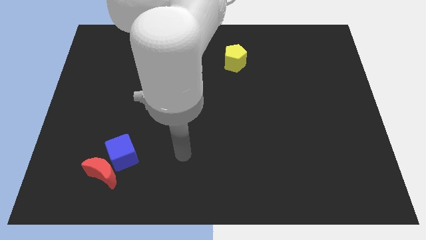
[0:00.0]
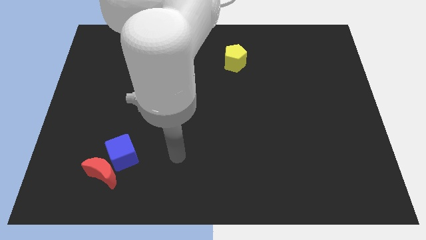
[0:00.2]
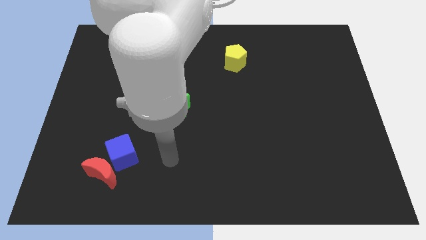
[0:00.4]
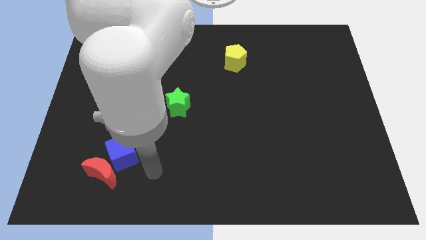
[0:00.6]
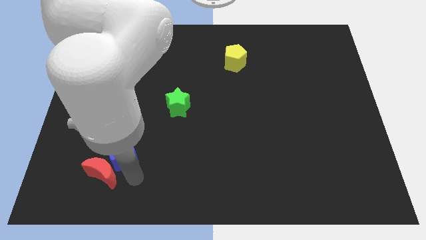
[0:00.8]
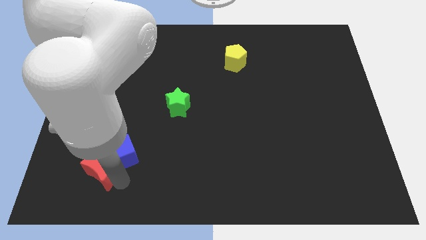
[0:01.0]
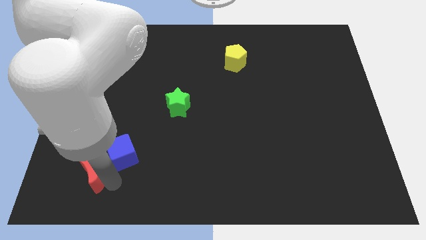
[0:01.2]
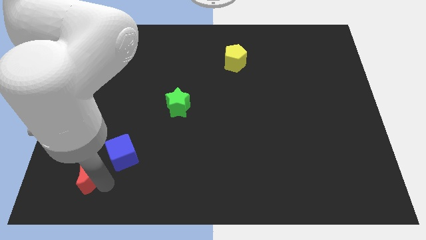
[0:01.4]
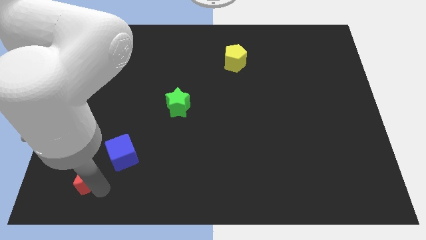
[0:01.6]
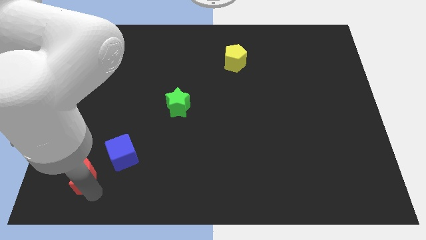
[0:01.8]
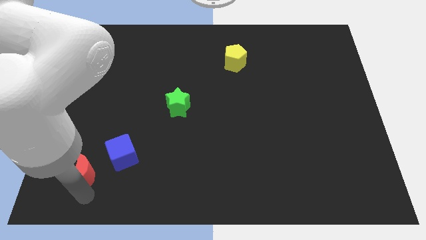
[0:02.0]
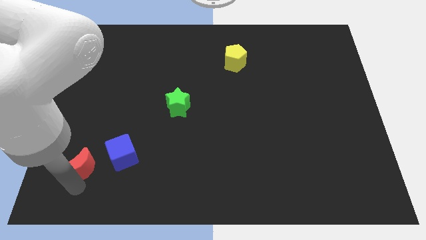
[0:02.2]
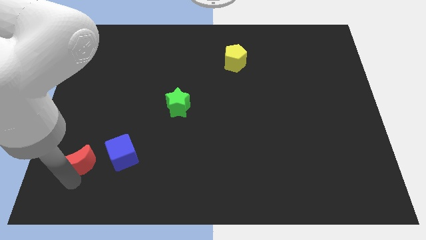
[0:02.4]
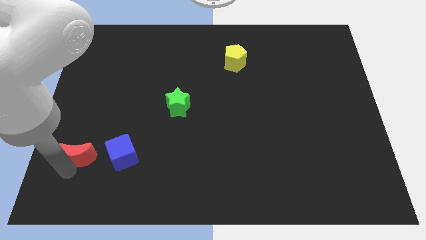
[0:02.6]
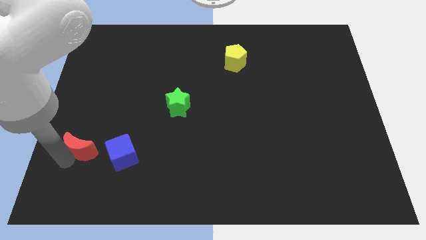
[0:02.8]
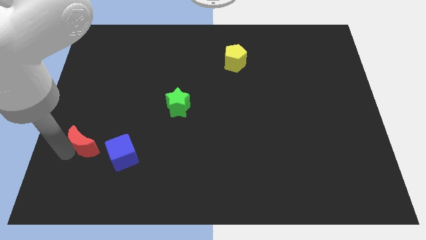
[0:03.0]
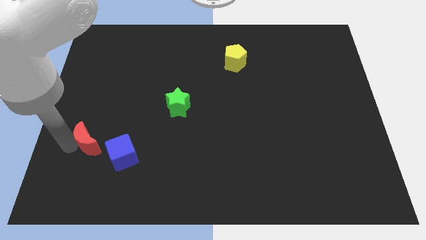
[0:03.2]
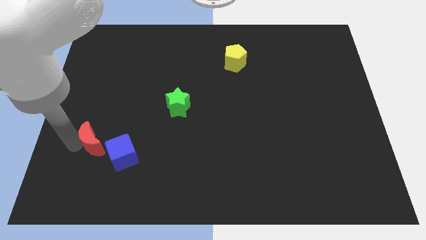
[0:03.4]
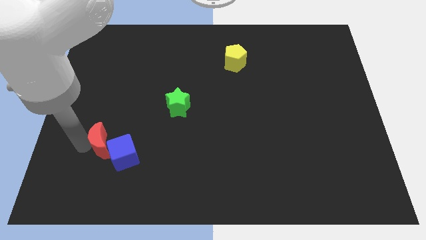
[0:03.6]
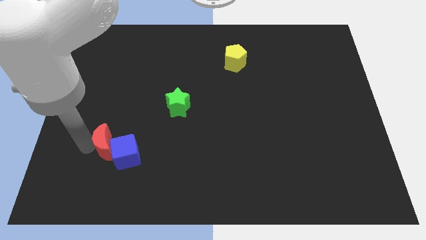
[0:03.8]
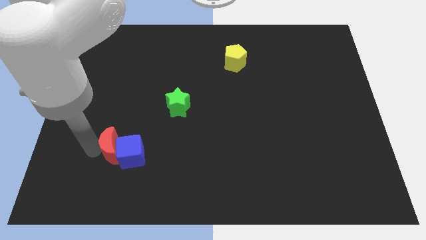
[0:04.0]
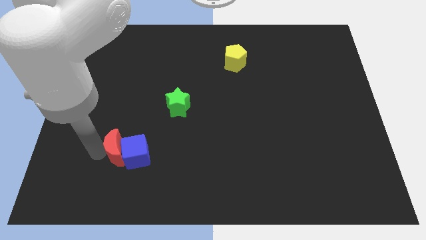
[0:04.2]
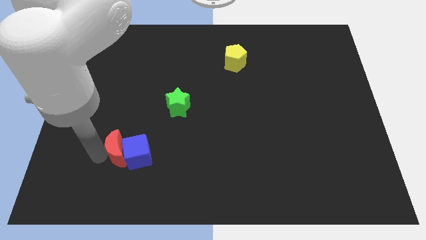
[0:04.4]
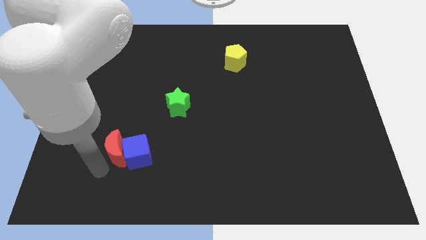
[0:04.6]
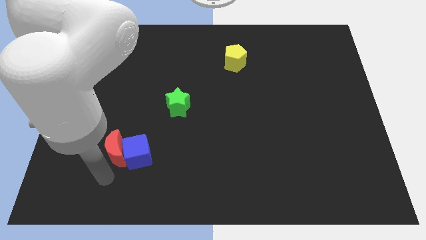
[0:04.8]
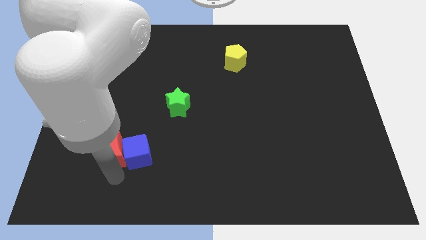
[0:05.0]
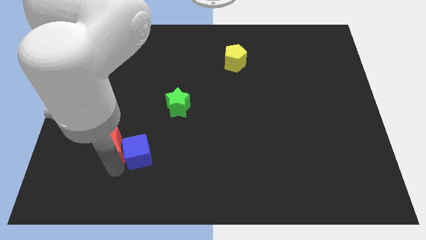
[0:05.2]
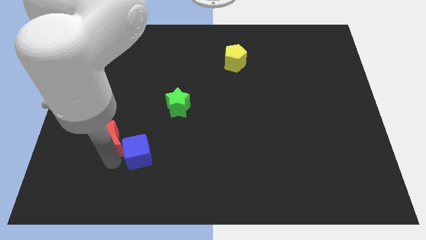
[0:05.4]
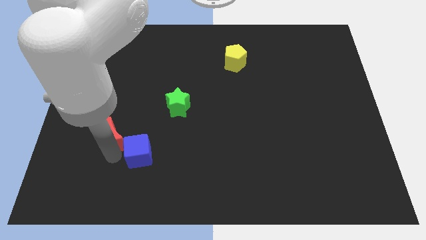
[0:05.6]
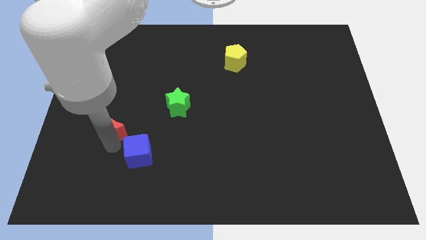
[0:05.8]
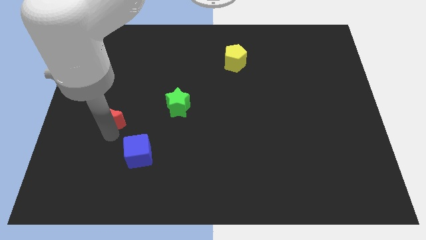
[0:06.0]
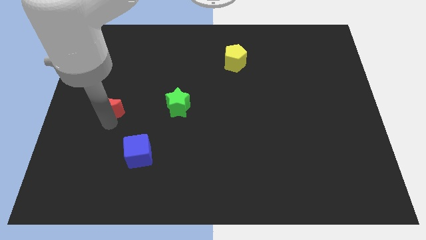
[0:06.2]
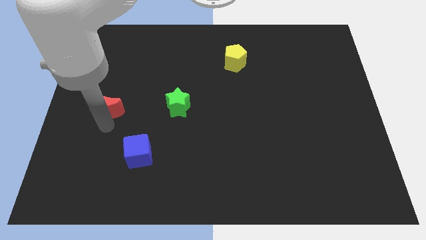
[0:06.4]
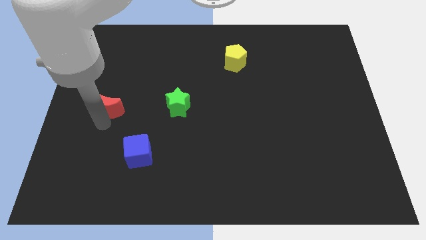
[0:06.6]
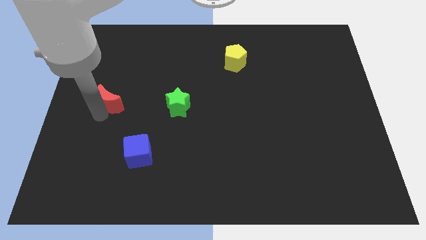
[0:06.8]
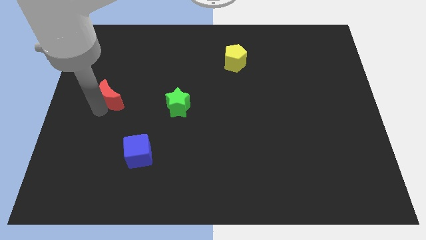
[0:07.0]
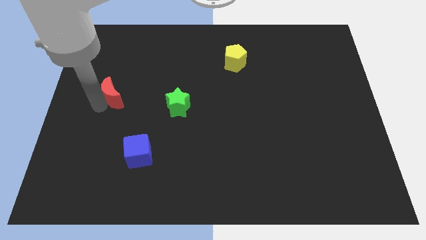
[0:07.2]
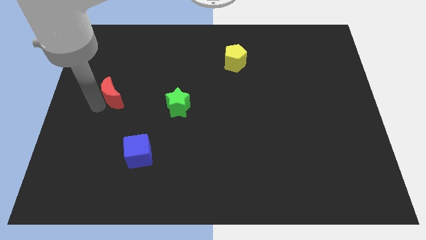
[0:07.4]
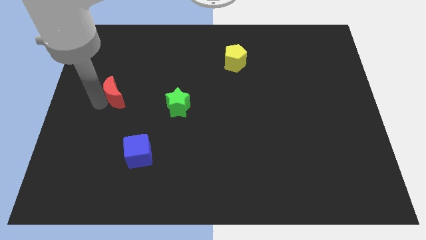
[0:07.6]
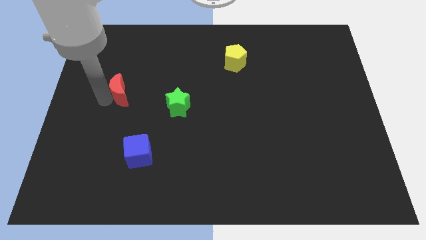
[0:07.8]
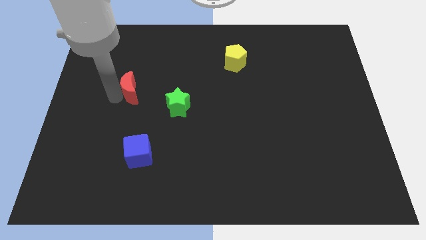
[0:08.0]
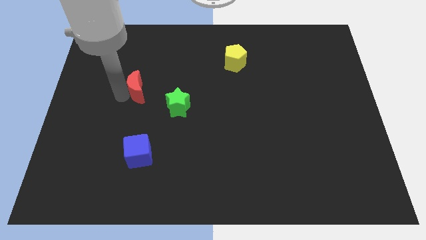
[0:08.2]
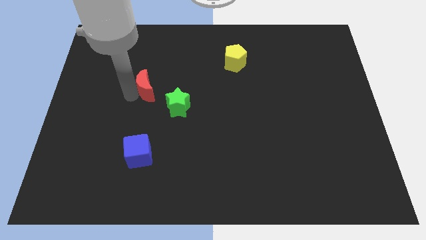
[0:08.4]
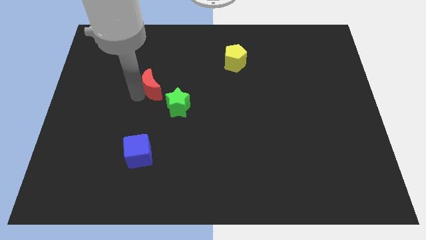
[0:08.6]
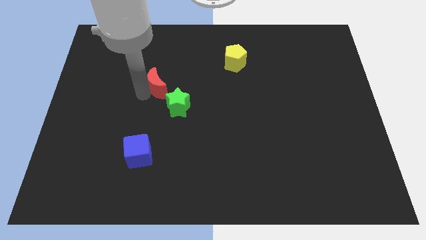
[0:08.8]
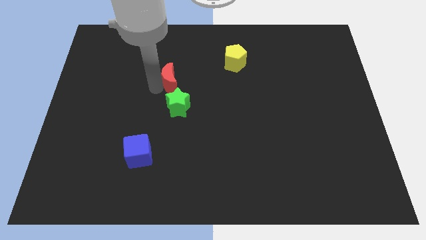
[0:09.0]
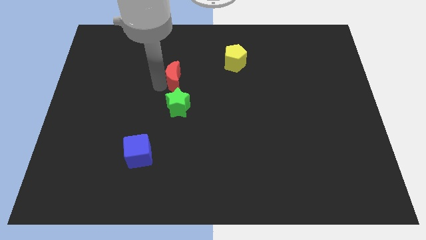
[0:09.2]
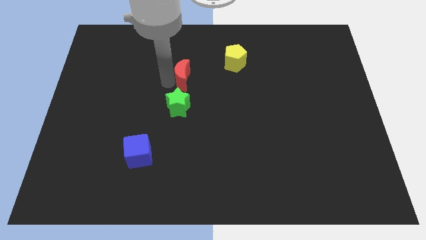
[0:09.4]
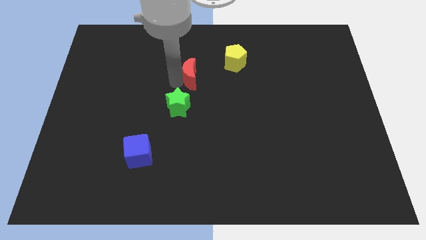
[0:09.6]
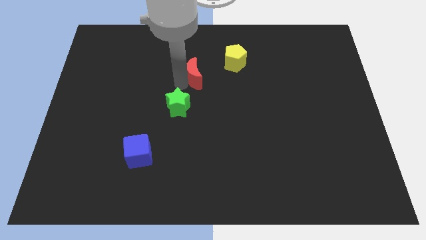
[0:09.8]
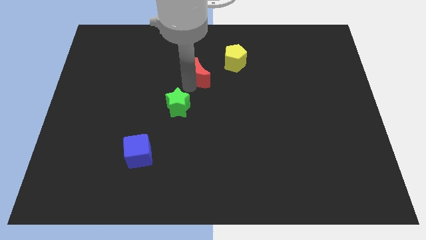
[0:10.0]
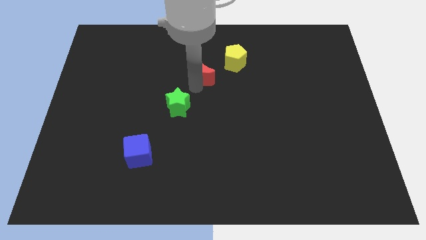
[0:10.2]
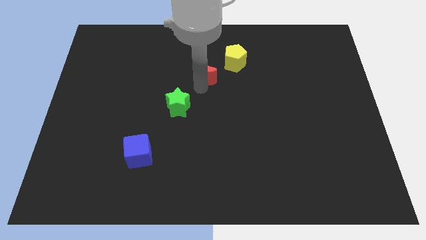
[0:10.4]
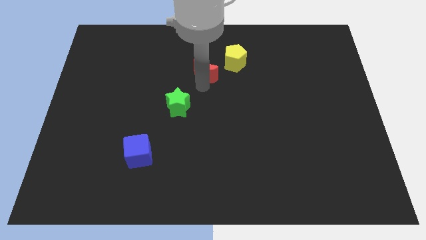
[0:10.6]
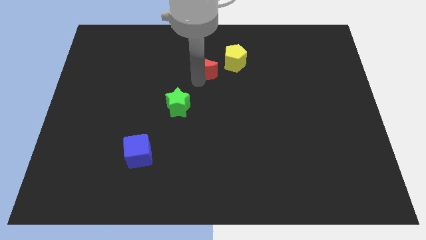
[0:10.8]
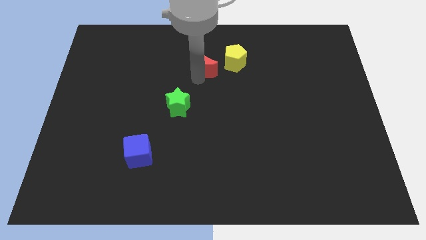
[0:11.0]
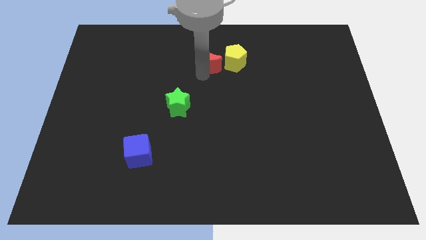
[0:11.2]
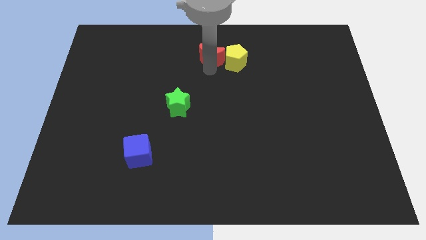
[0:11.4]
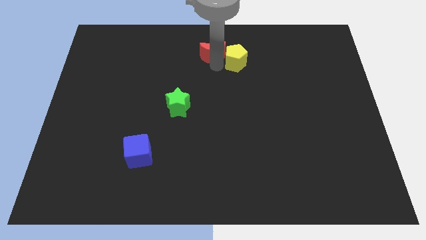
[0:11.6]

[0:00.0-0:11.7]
put the red block towards the yellow pentagon

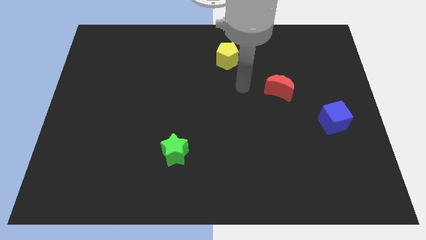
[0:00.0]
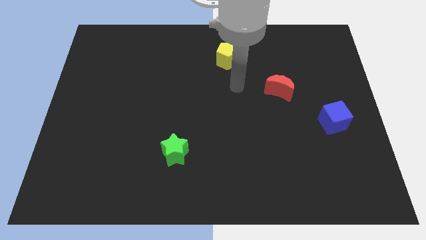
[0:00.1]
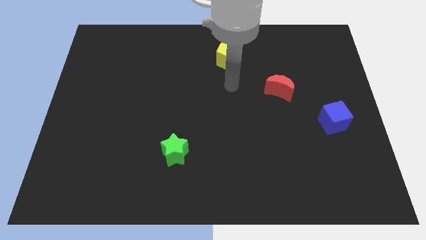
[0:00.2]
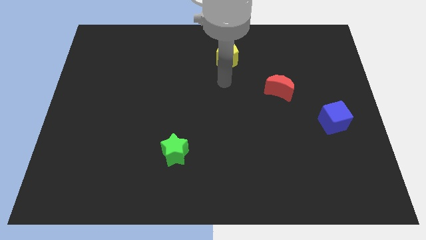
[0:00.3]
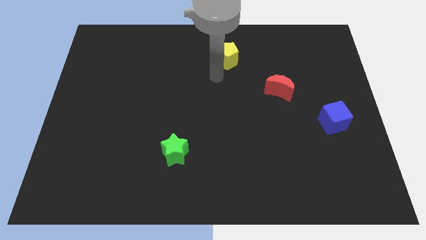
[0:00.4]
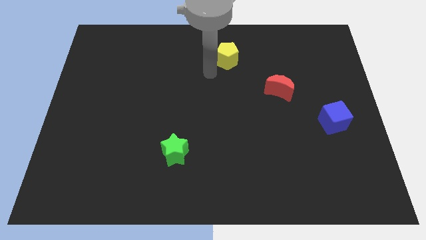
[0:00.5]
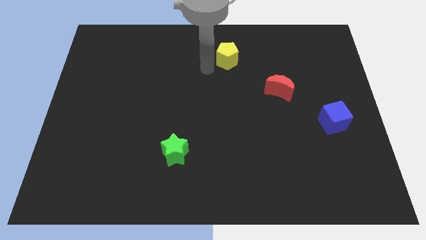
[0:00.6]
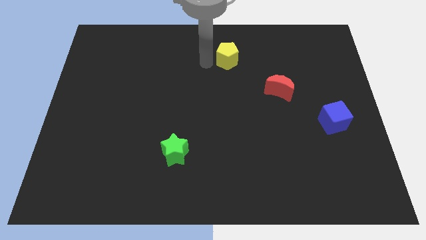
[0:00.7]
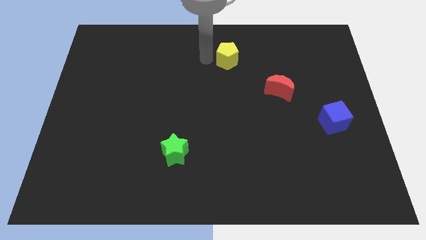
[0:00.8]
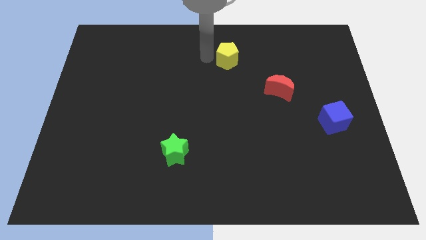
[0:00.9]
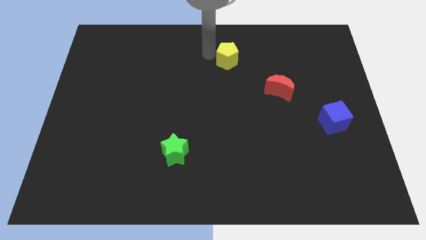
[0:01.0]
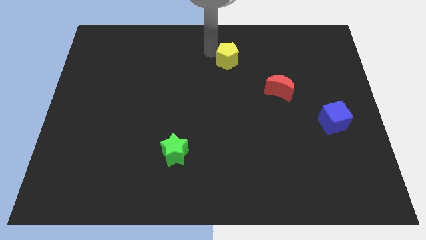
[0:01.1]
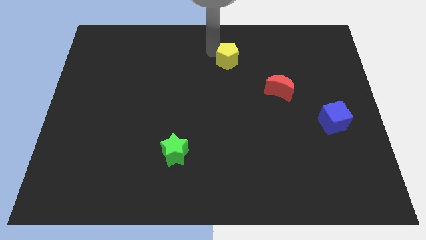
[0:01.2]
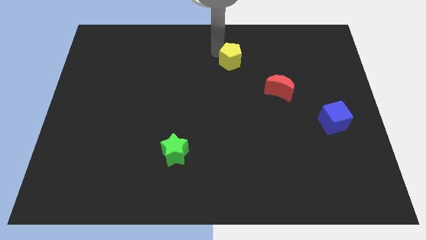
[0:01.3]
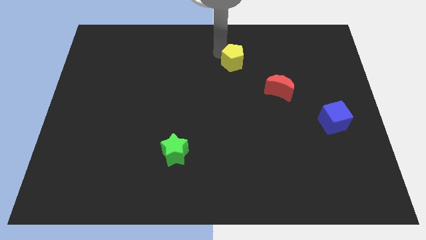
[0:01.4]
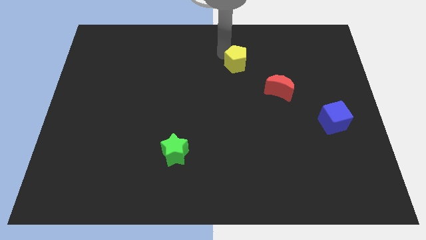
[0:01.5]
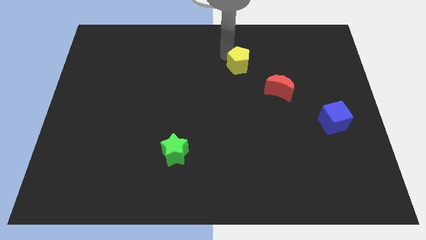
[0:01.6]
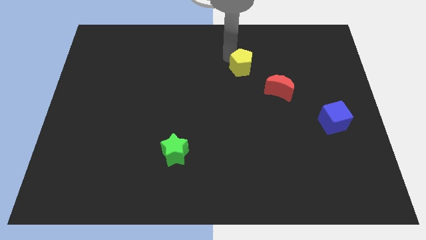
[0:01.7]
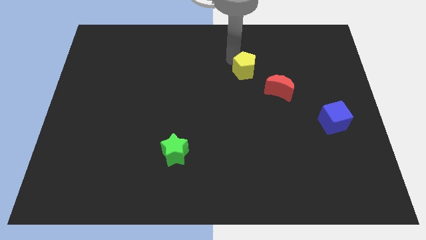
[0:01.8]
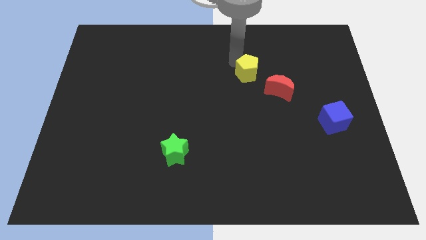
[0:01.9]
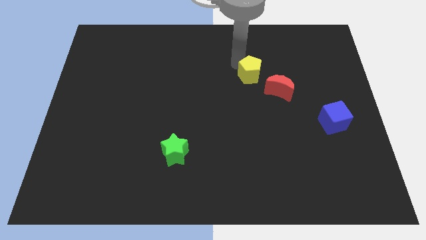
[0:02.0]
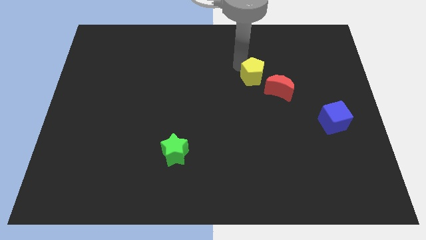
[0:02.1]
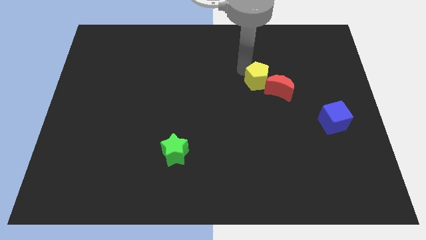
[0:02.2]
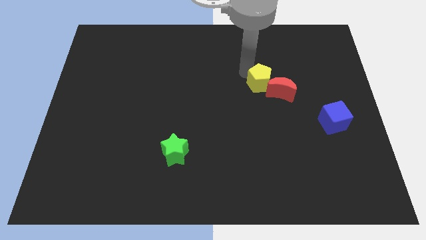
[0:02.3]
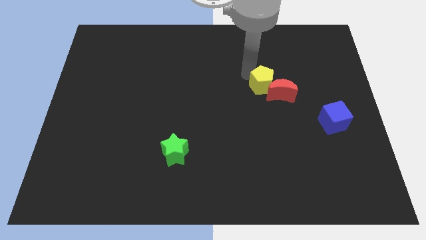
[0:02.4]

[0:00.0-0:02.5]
push the pentagon towards the red block

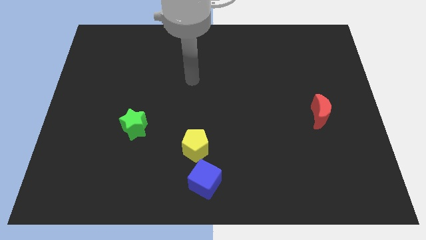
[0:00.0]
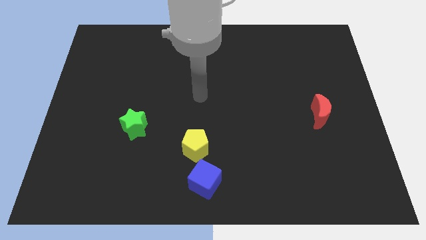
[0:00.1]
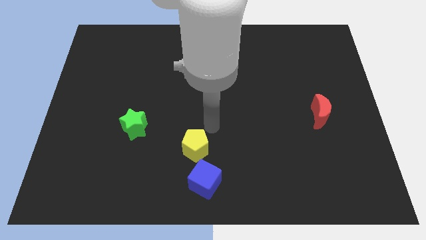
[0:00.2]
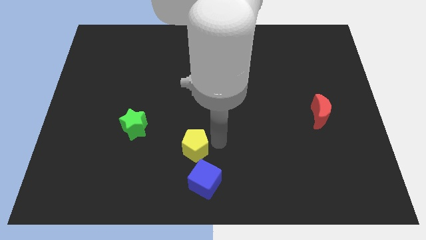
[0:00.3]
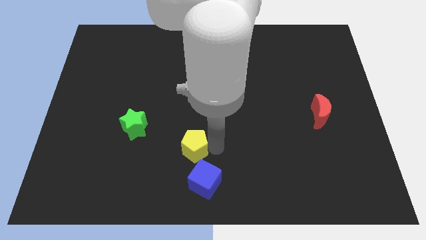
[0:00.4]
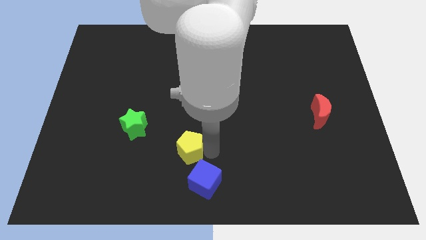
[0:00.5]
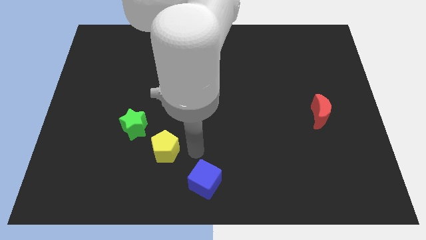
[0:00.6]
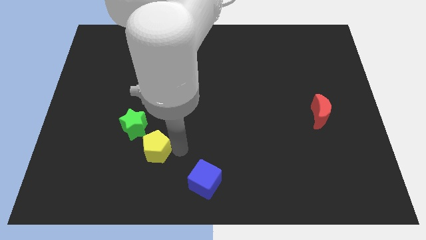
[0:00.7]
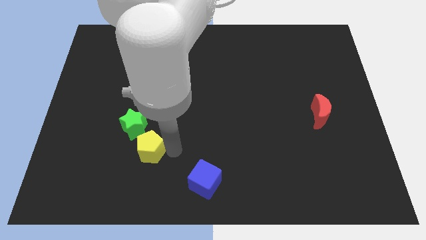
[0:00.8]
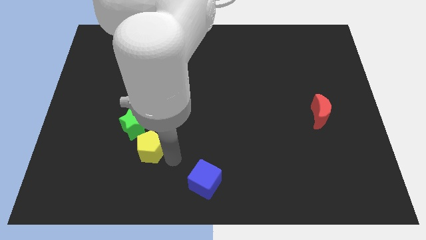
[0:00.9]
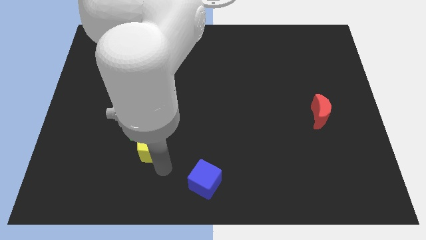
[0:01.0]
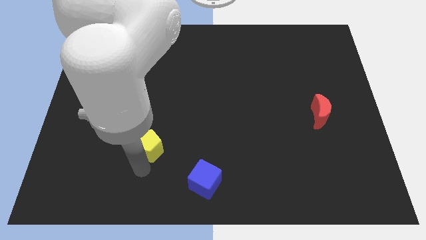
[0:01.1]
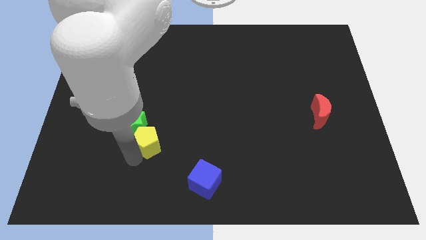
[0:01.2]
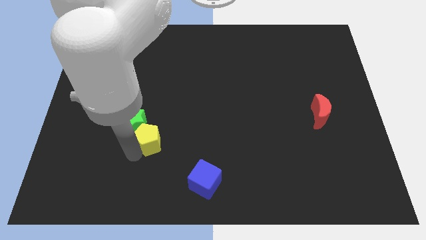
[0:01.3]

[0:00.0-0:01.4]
move the yellow block close to the green star
